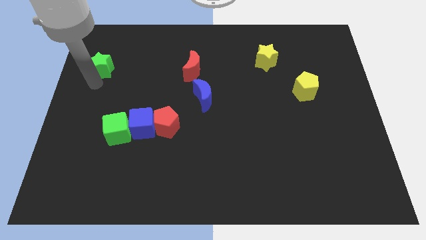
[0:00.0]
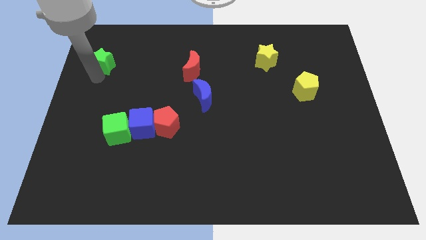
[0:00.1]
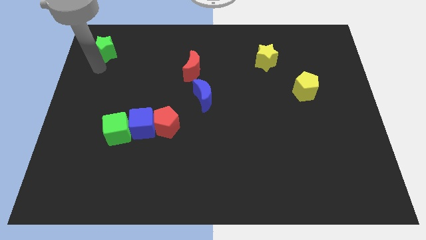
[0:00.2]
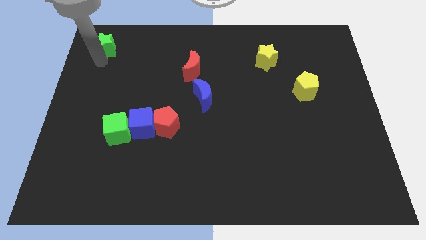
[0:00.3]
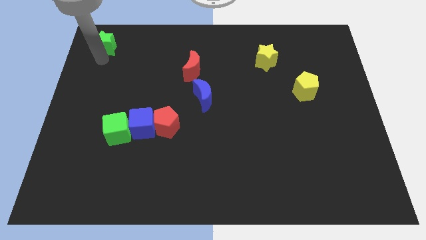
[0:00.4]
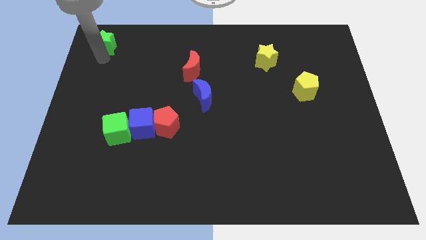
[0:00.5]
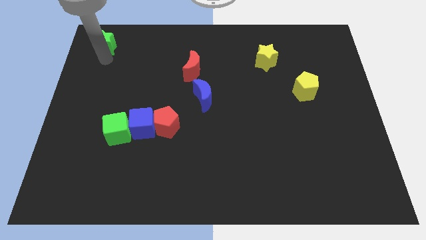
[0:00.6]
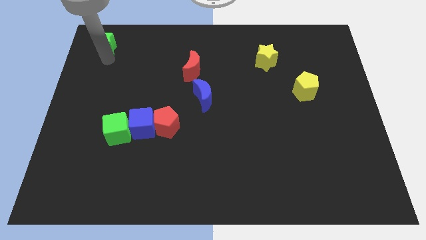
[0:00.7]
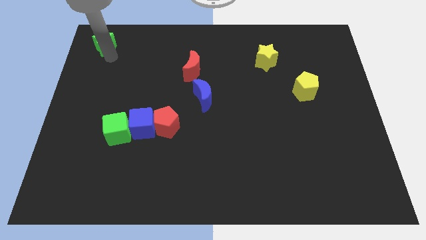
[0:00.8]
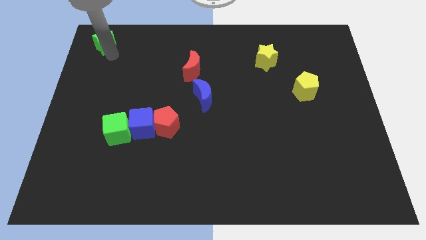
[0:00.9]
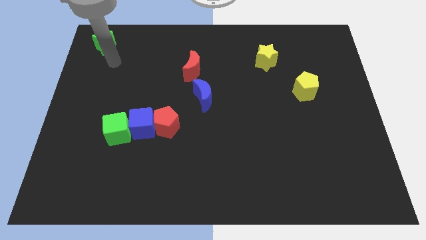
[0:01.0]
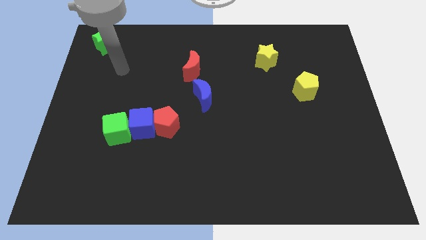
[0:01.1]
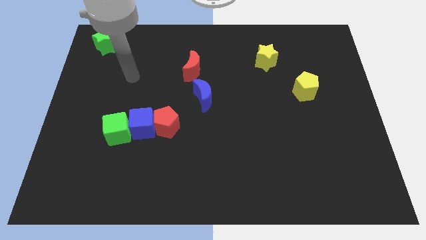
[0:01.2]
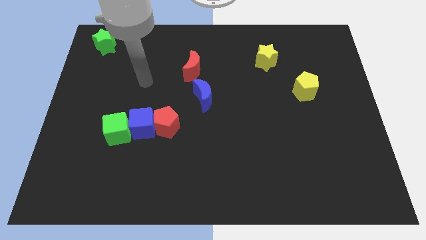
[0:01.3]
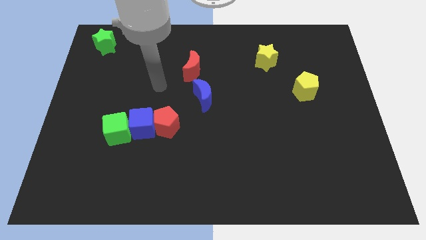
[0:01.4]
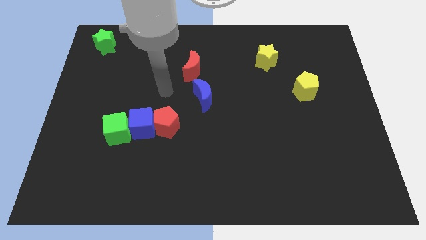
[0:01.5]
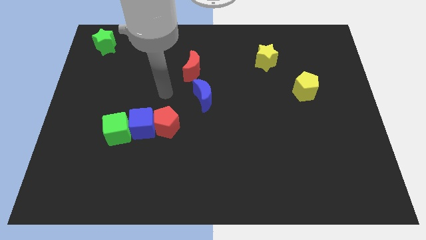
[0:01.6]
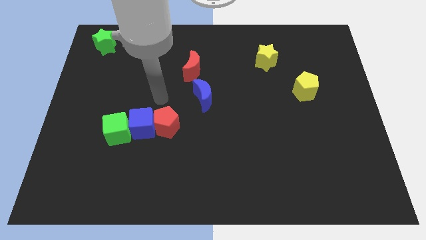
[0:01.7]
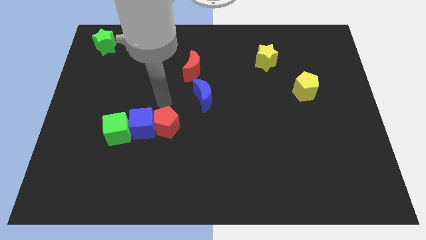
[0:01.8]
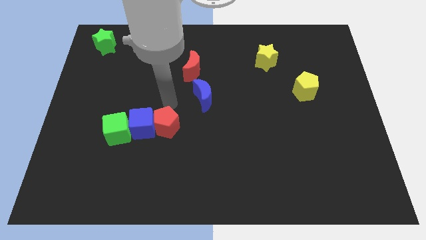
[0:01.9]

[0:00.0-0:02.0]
push the green star to the top side

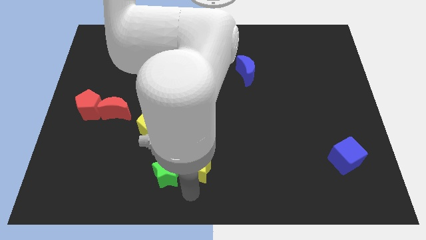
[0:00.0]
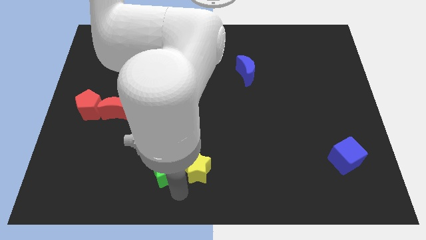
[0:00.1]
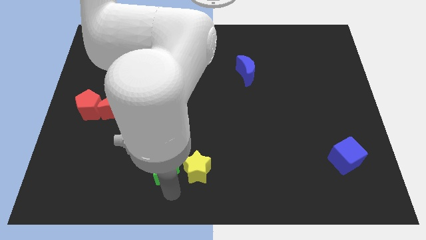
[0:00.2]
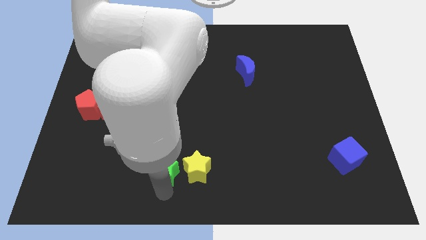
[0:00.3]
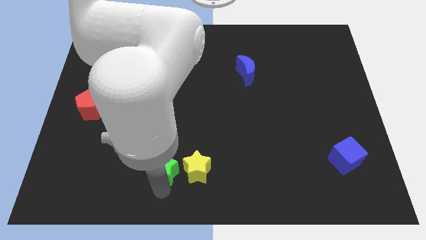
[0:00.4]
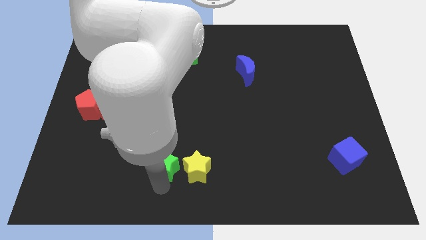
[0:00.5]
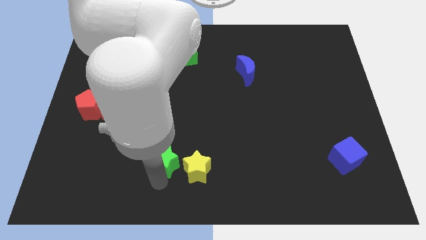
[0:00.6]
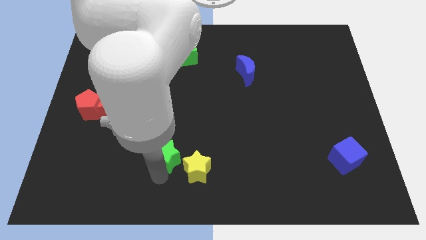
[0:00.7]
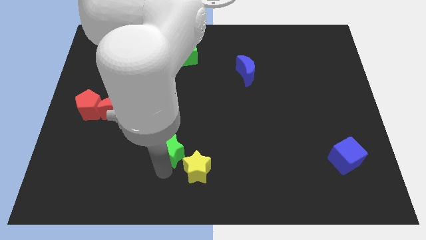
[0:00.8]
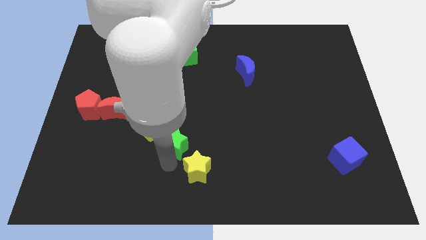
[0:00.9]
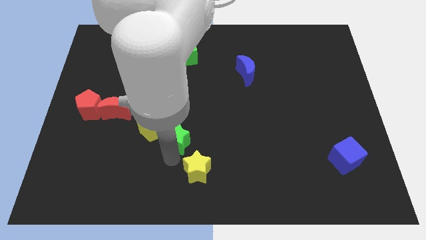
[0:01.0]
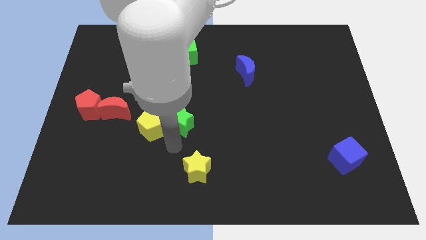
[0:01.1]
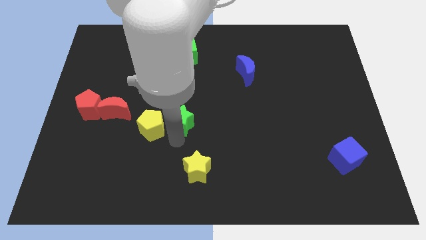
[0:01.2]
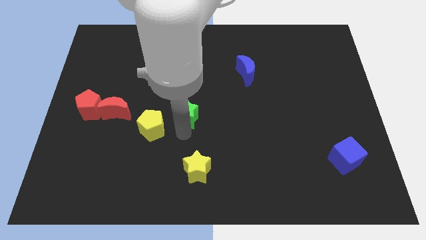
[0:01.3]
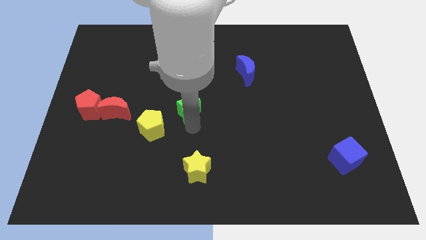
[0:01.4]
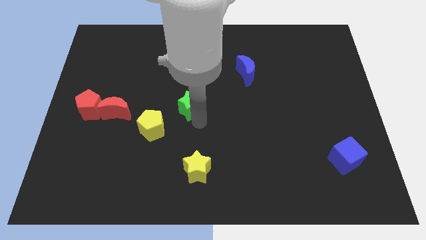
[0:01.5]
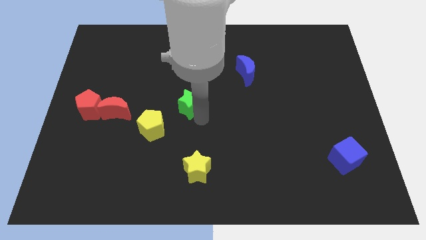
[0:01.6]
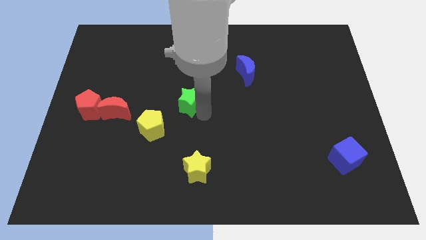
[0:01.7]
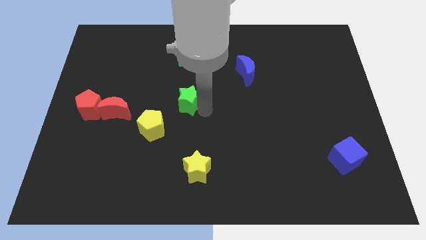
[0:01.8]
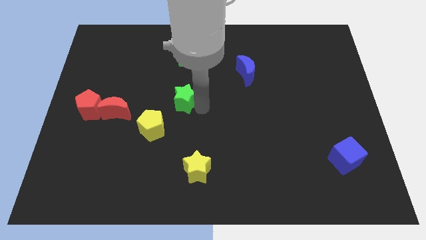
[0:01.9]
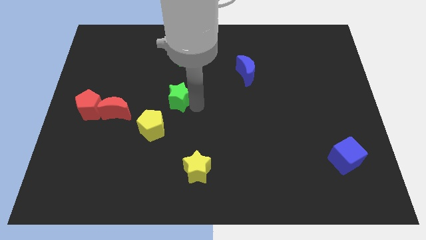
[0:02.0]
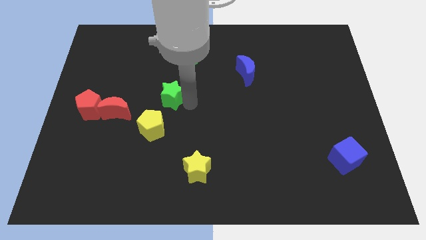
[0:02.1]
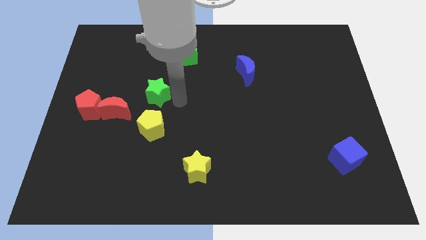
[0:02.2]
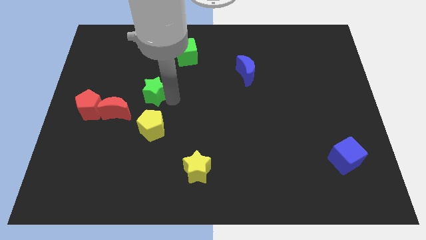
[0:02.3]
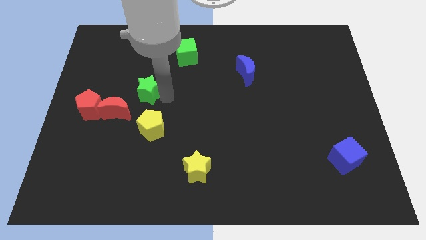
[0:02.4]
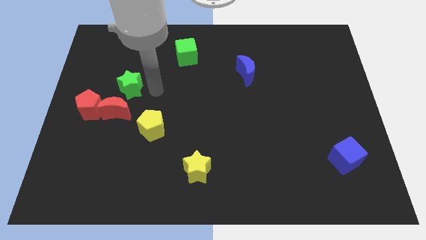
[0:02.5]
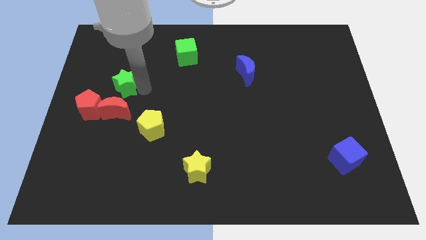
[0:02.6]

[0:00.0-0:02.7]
place the green star above the red moon

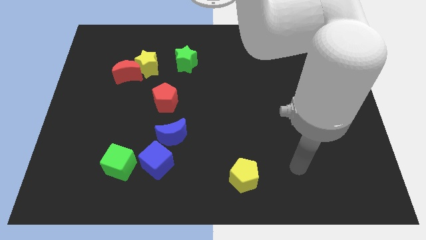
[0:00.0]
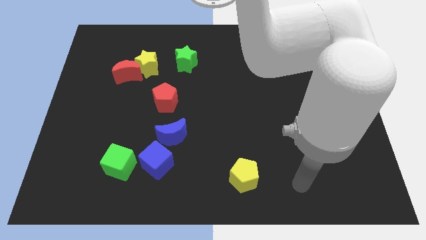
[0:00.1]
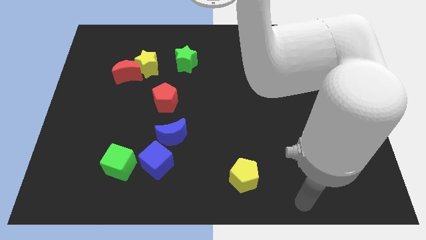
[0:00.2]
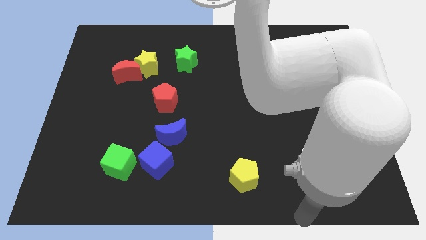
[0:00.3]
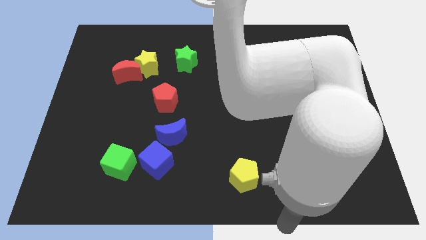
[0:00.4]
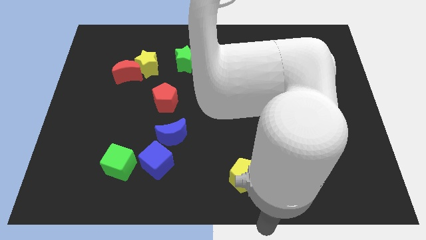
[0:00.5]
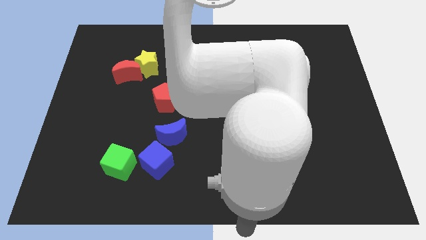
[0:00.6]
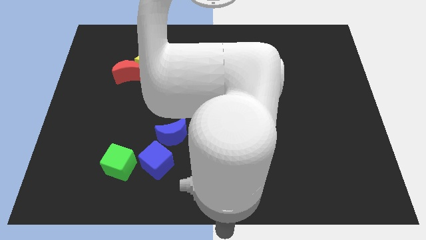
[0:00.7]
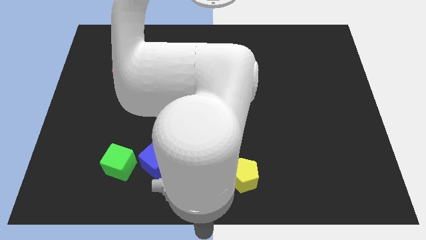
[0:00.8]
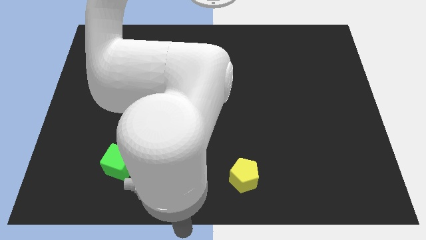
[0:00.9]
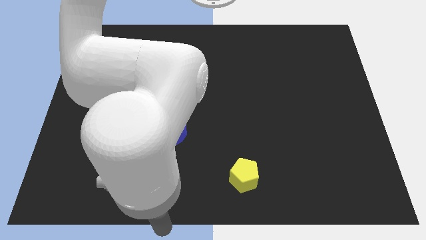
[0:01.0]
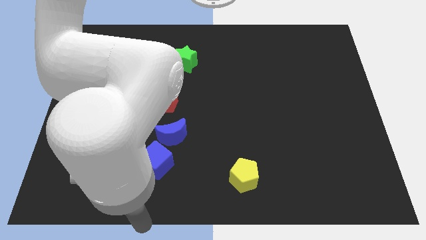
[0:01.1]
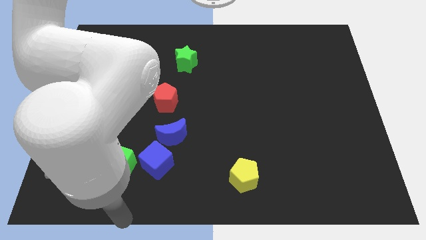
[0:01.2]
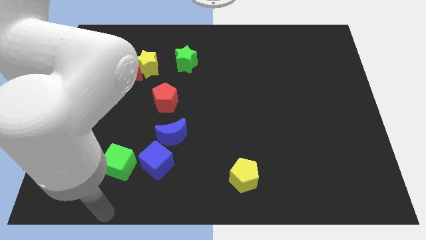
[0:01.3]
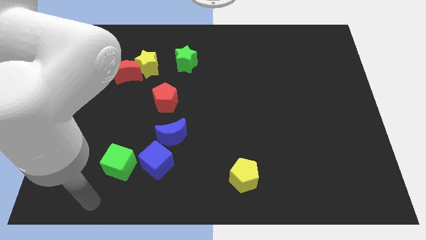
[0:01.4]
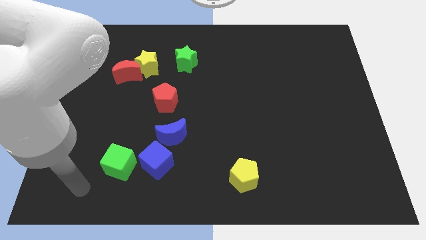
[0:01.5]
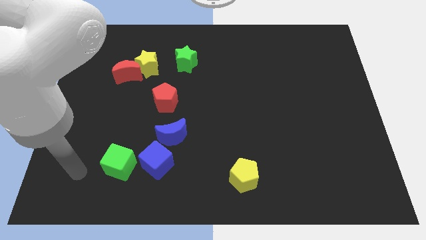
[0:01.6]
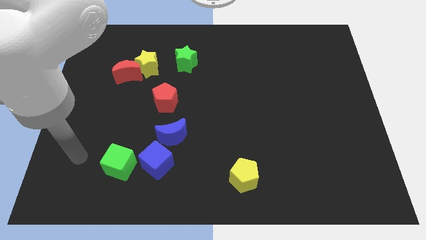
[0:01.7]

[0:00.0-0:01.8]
move the arm to the left side of the green cube

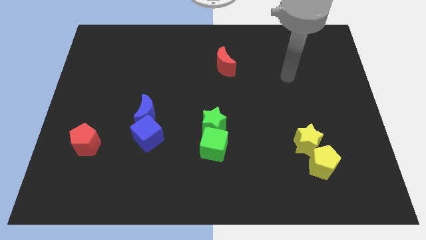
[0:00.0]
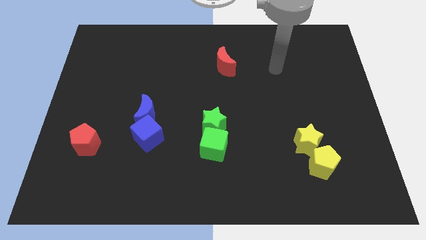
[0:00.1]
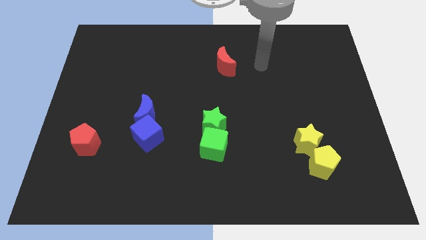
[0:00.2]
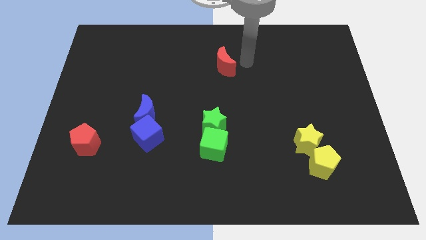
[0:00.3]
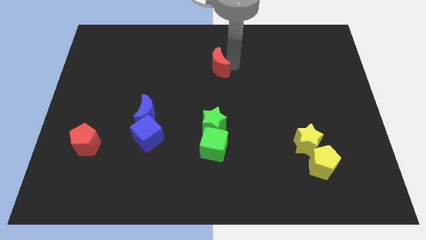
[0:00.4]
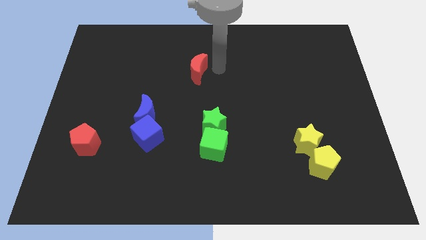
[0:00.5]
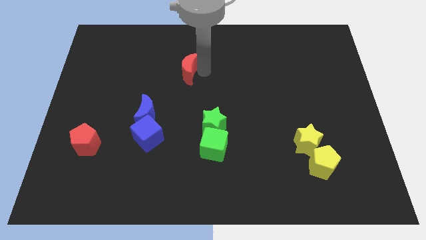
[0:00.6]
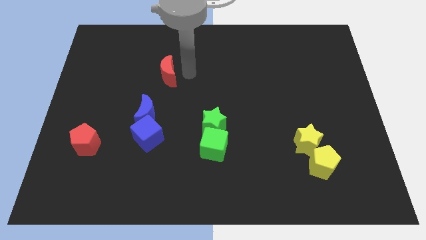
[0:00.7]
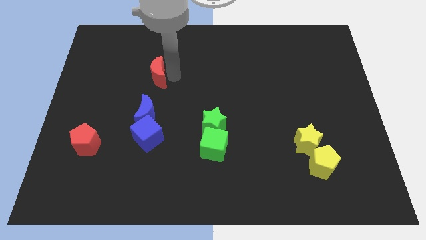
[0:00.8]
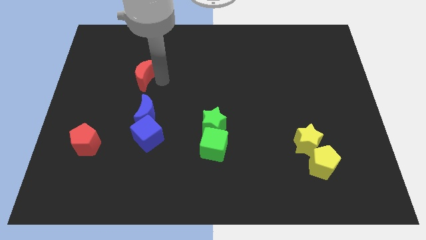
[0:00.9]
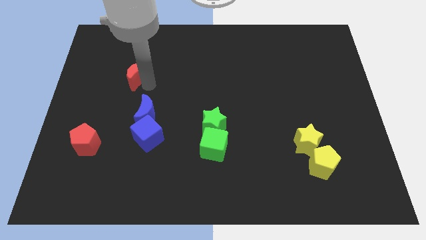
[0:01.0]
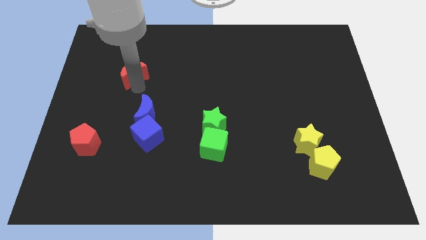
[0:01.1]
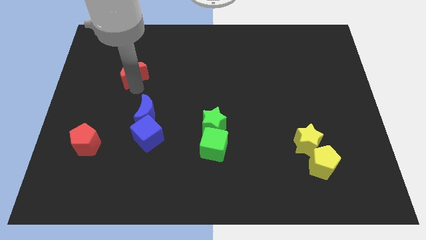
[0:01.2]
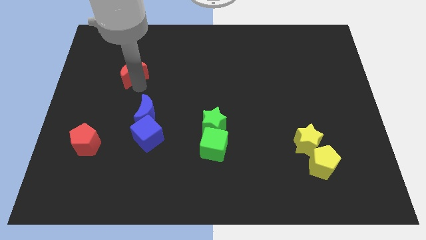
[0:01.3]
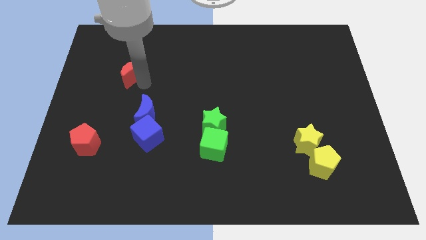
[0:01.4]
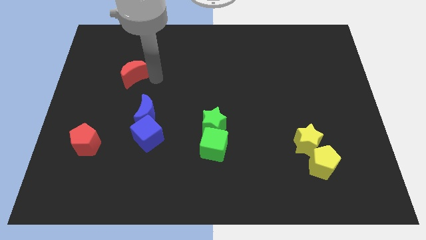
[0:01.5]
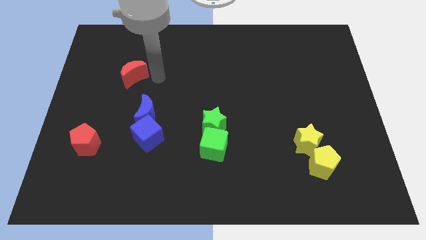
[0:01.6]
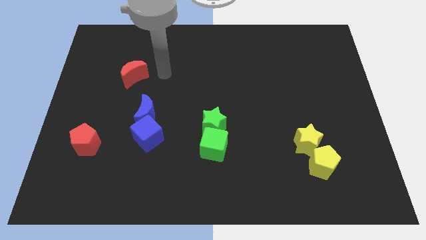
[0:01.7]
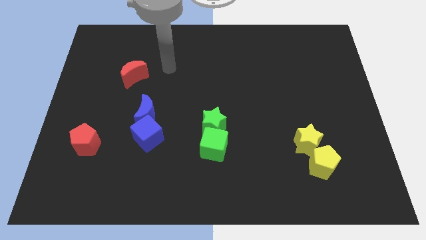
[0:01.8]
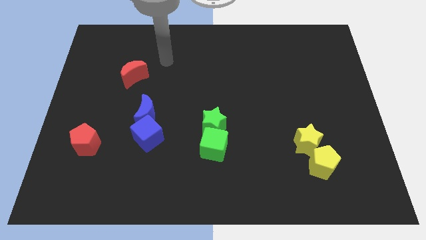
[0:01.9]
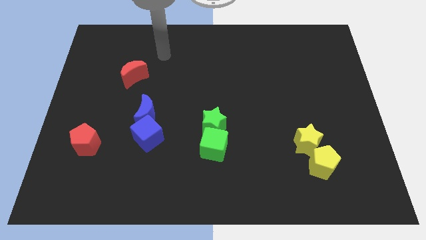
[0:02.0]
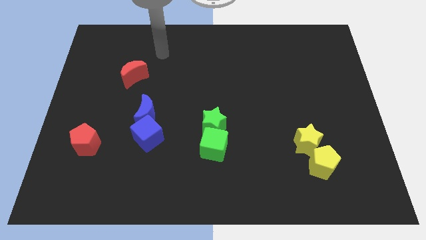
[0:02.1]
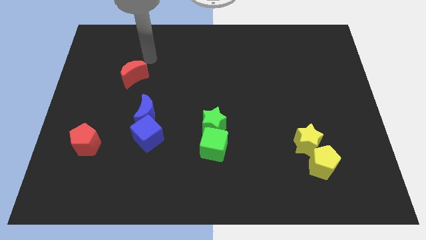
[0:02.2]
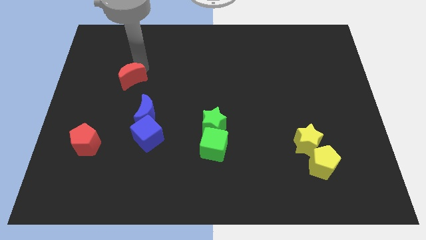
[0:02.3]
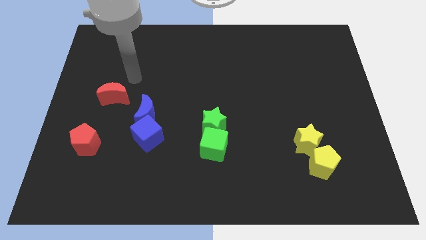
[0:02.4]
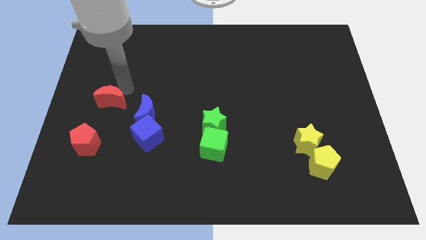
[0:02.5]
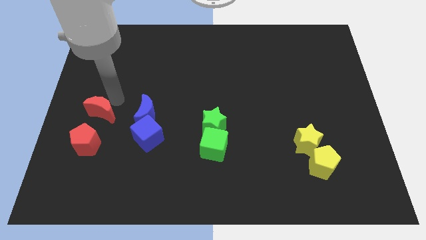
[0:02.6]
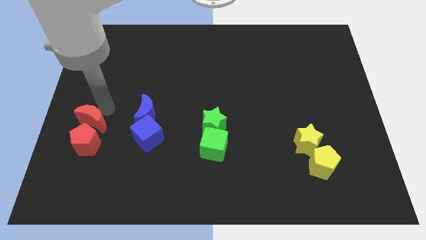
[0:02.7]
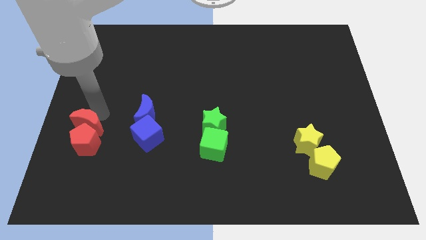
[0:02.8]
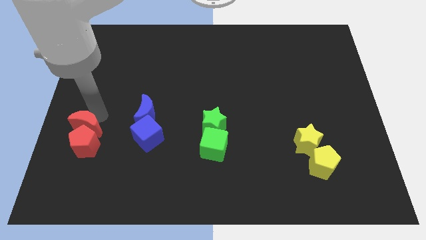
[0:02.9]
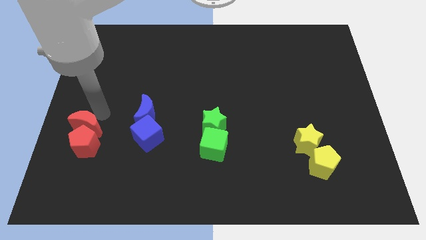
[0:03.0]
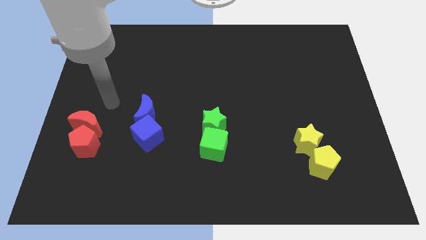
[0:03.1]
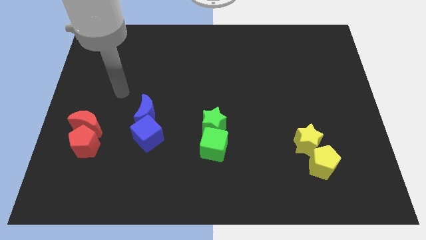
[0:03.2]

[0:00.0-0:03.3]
push the red moon into the red pentagon
